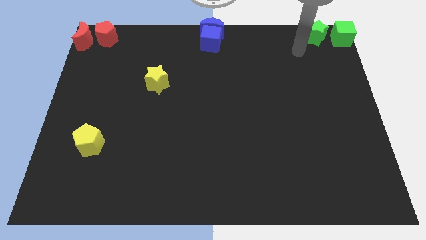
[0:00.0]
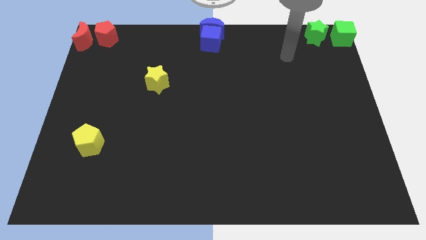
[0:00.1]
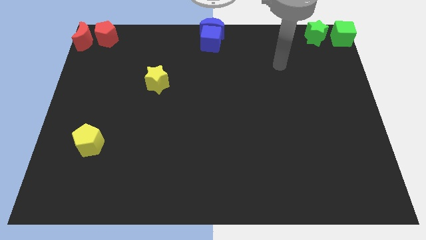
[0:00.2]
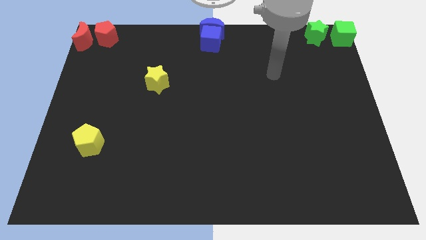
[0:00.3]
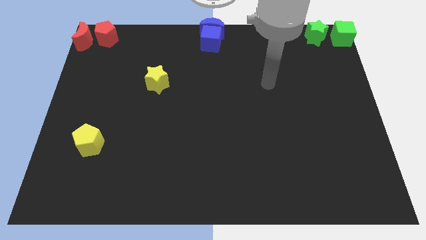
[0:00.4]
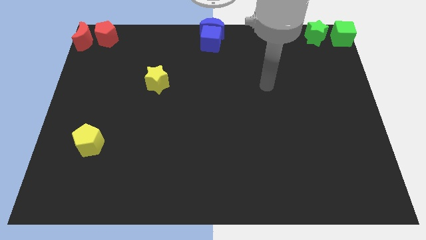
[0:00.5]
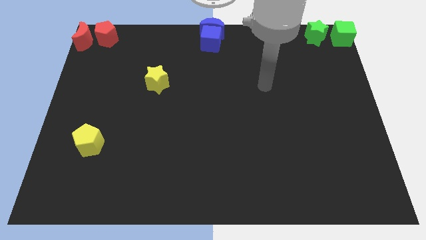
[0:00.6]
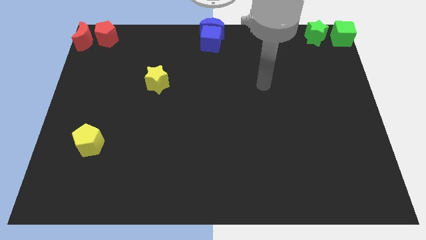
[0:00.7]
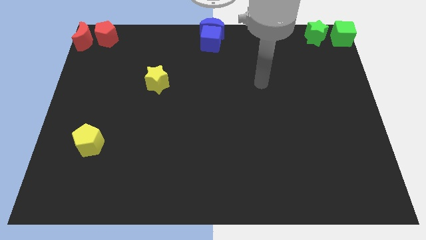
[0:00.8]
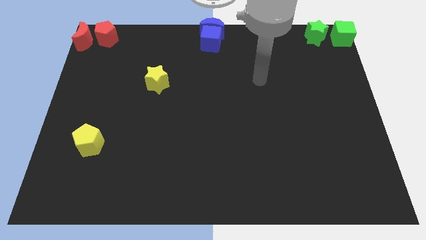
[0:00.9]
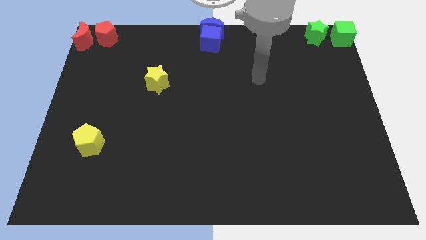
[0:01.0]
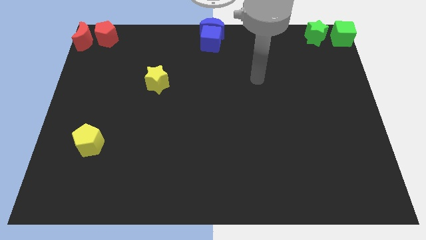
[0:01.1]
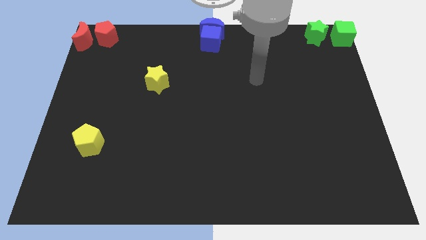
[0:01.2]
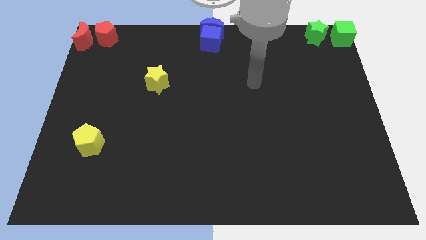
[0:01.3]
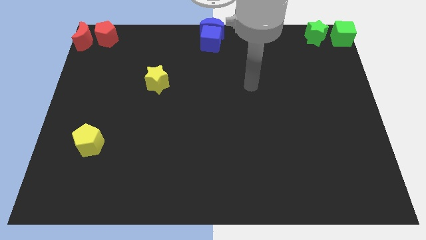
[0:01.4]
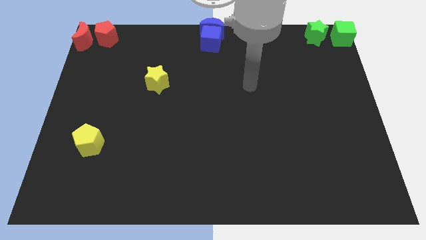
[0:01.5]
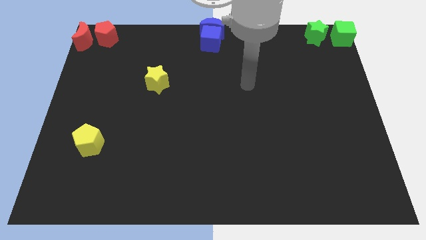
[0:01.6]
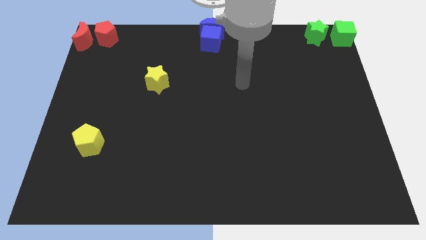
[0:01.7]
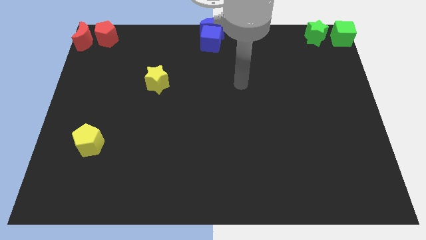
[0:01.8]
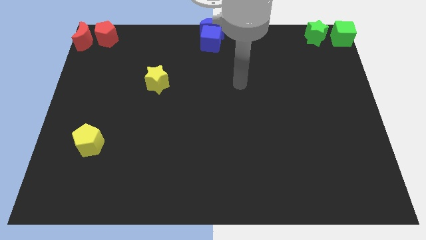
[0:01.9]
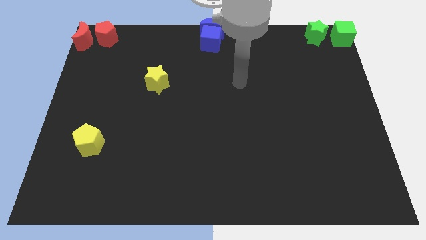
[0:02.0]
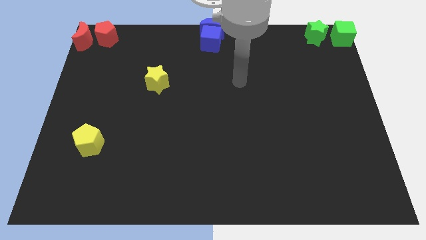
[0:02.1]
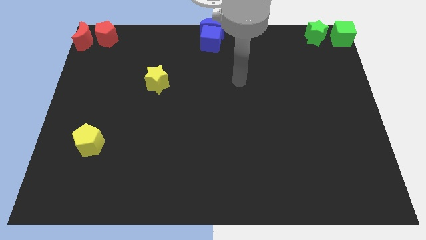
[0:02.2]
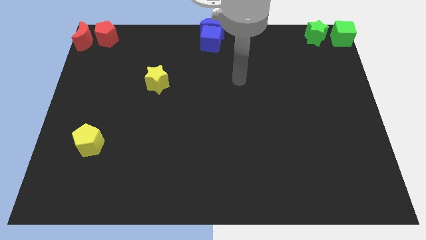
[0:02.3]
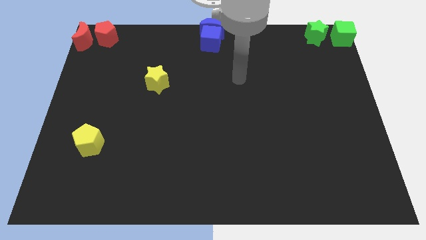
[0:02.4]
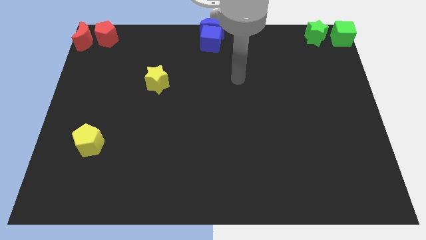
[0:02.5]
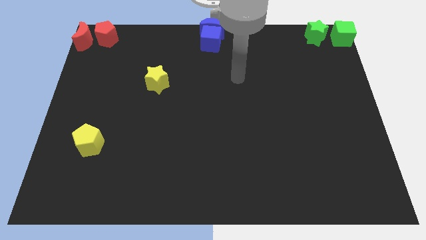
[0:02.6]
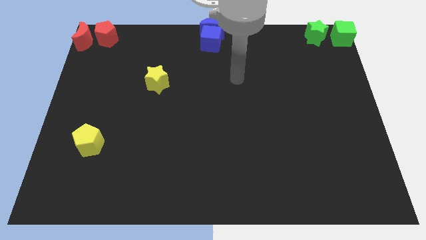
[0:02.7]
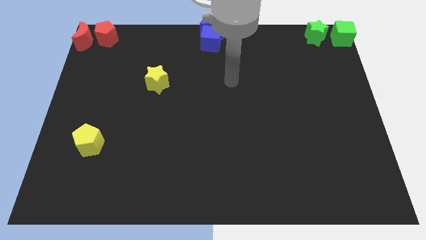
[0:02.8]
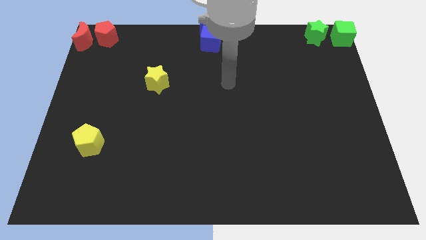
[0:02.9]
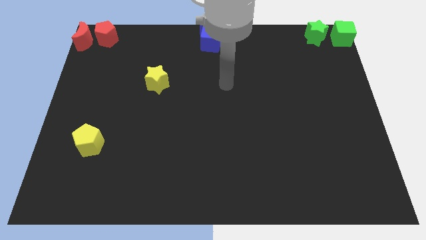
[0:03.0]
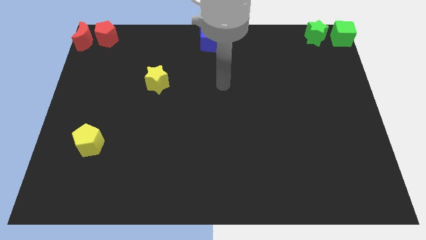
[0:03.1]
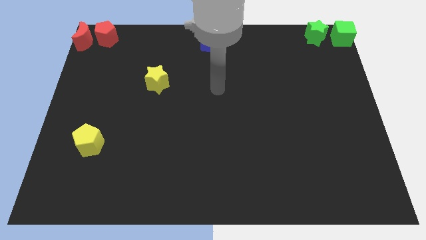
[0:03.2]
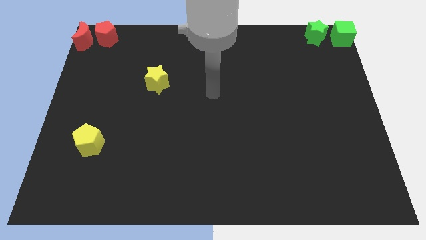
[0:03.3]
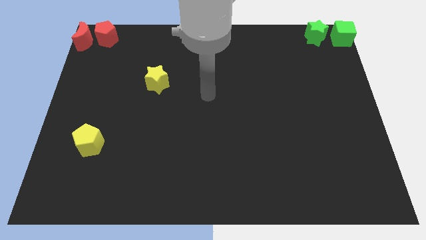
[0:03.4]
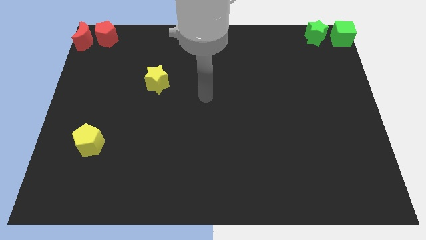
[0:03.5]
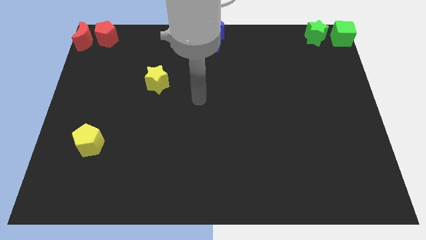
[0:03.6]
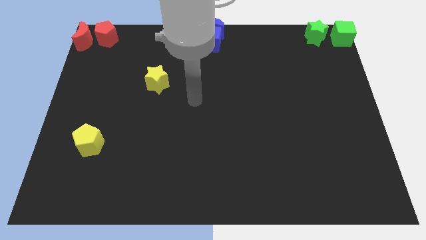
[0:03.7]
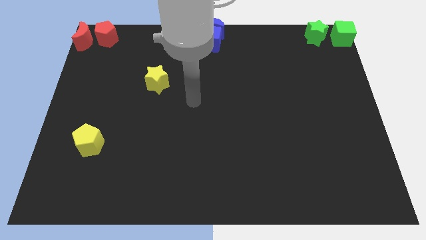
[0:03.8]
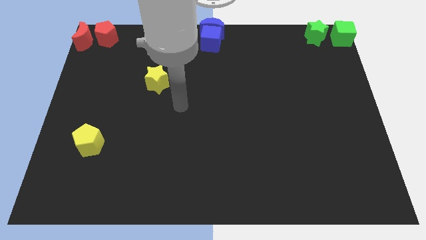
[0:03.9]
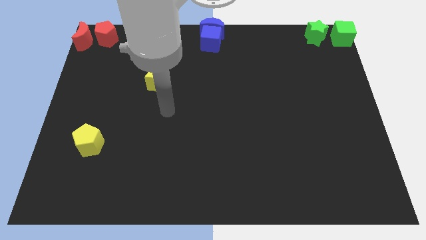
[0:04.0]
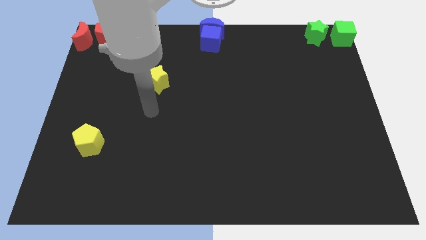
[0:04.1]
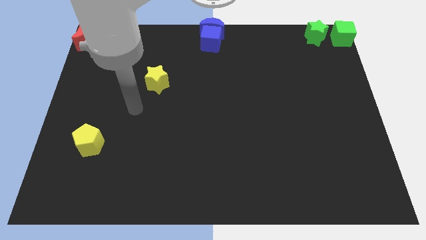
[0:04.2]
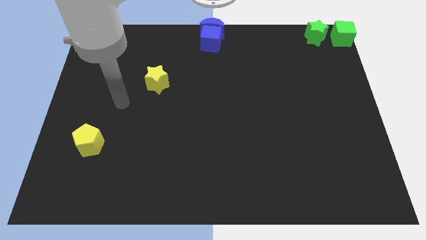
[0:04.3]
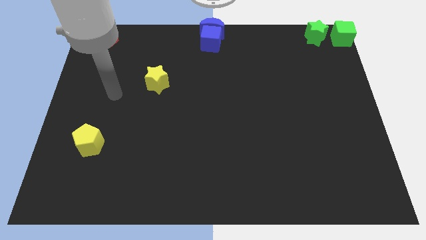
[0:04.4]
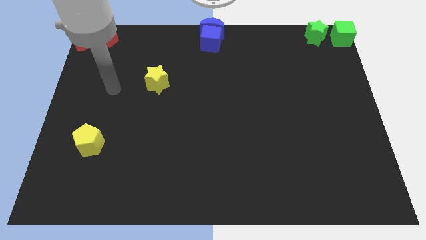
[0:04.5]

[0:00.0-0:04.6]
move your arm to the left of the yellow star

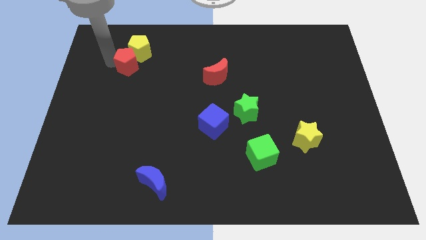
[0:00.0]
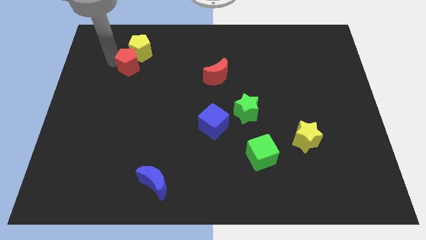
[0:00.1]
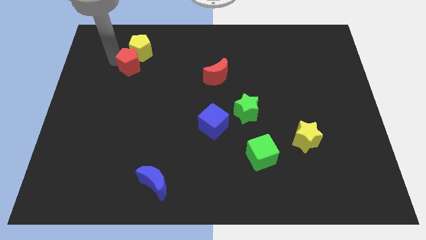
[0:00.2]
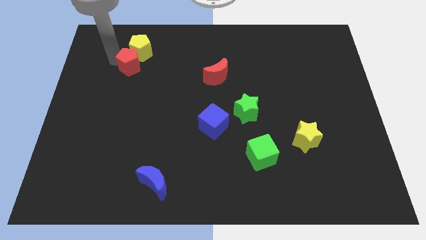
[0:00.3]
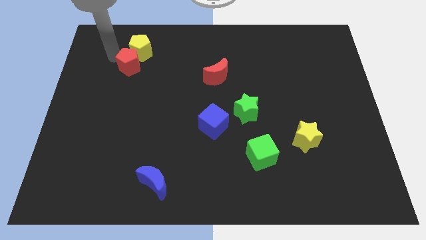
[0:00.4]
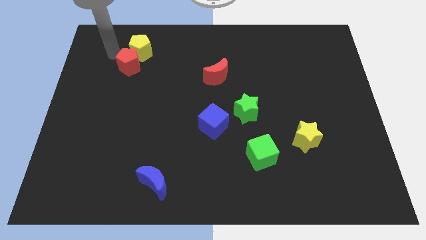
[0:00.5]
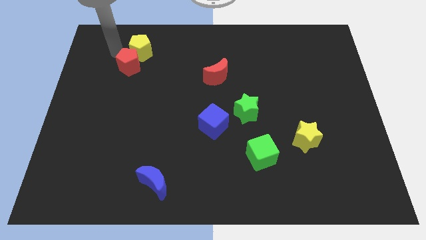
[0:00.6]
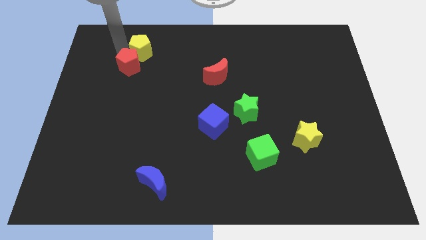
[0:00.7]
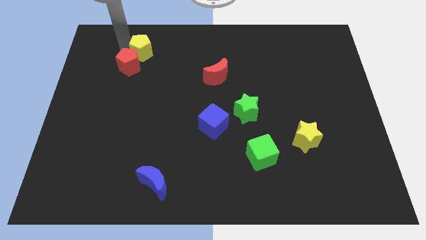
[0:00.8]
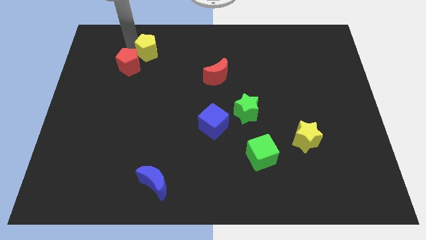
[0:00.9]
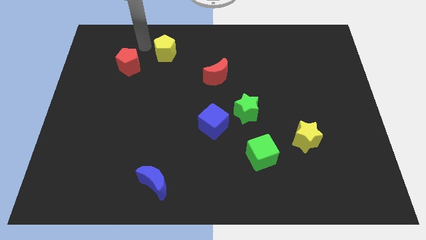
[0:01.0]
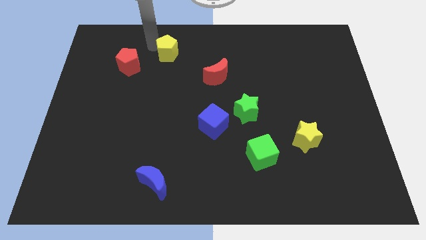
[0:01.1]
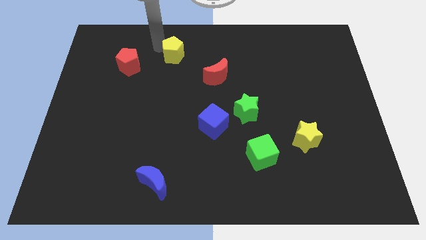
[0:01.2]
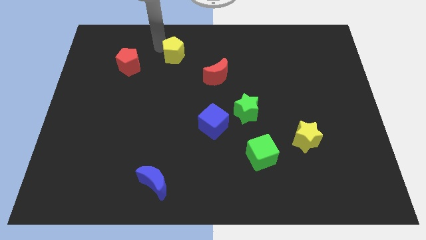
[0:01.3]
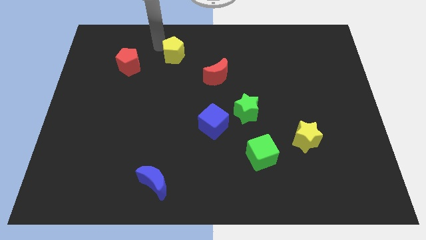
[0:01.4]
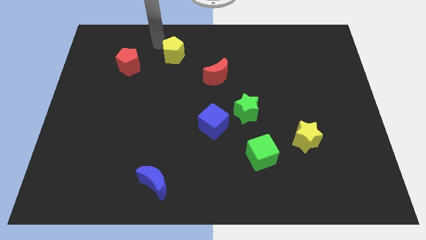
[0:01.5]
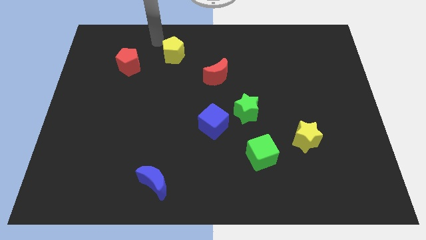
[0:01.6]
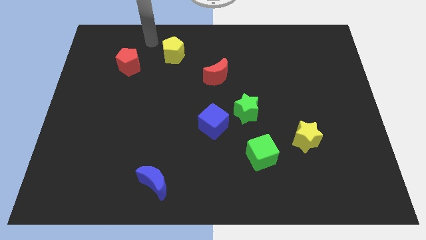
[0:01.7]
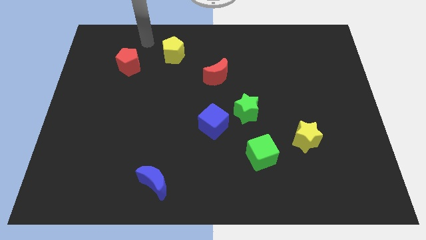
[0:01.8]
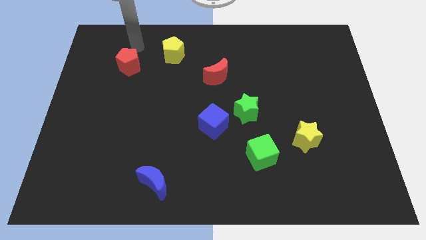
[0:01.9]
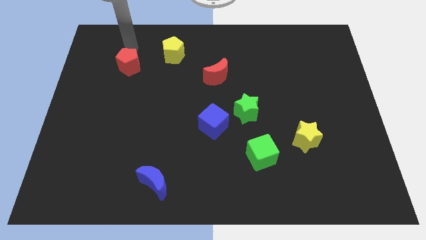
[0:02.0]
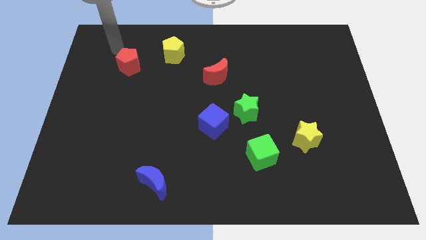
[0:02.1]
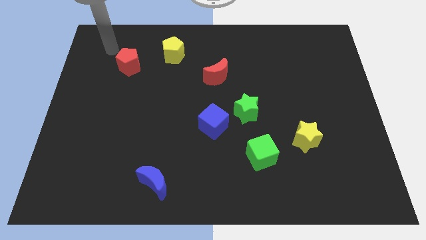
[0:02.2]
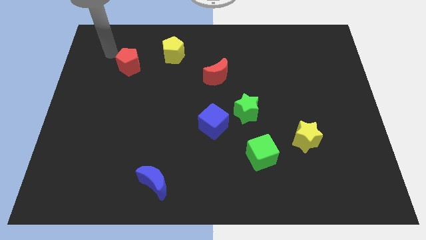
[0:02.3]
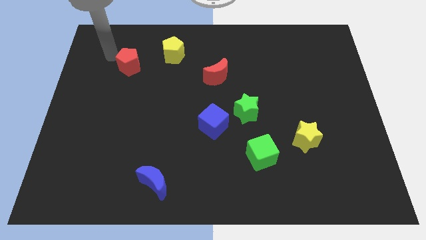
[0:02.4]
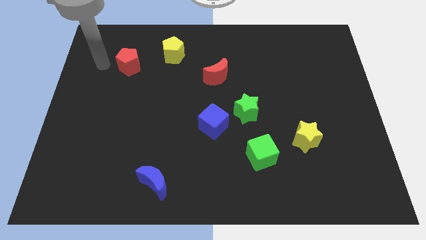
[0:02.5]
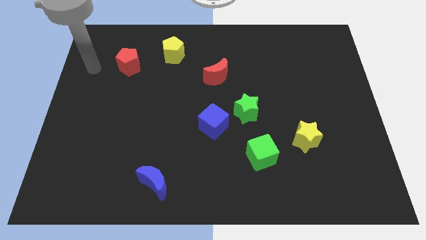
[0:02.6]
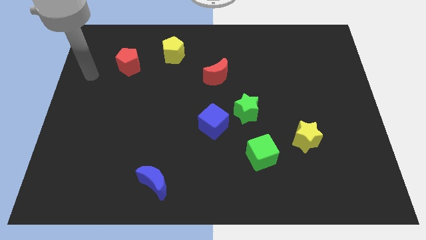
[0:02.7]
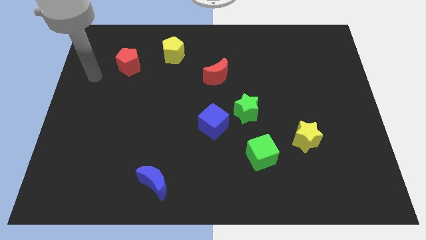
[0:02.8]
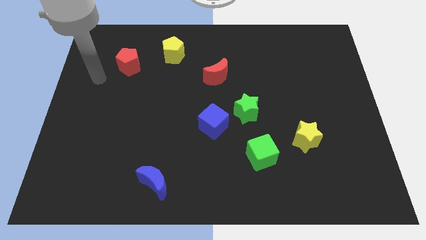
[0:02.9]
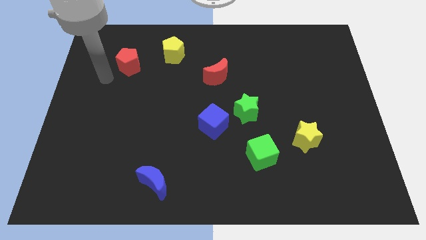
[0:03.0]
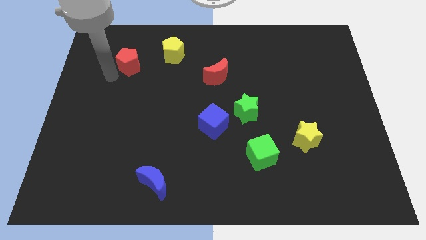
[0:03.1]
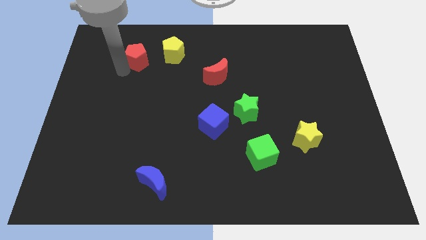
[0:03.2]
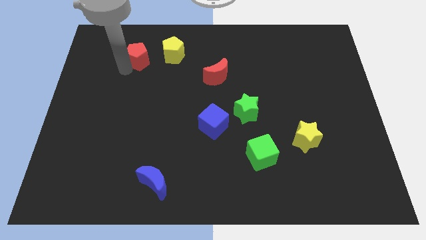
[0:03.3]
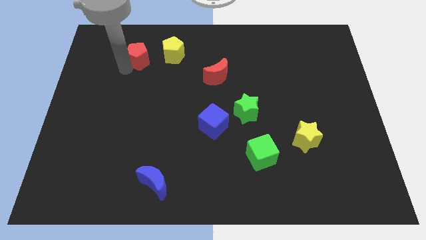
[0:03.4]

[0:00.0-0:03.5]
separate the yellow pentagon from the red pentagon

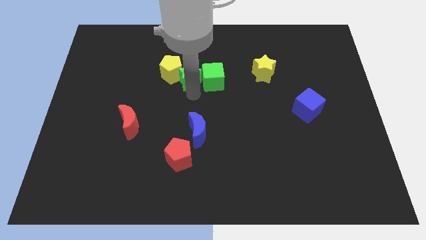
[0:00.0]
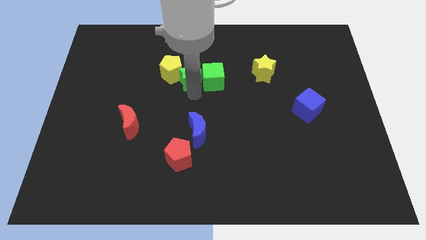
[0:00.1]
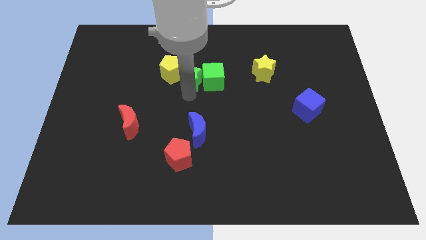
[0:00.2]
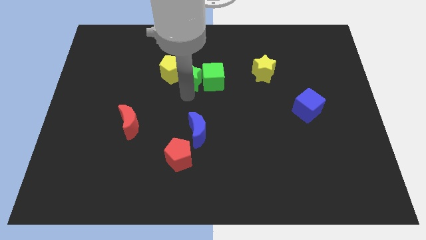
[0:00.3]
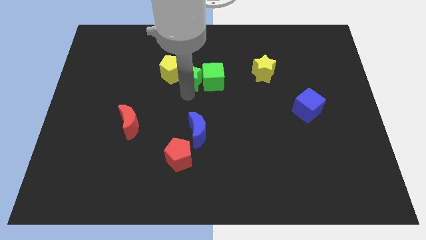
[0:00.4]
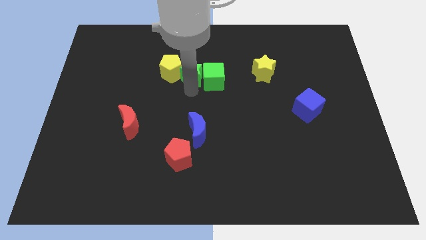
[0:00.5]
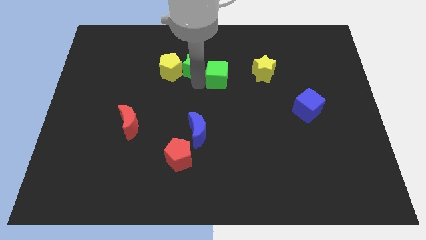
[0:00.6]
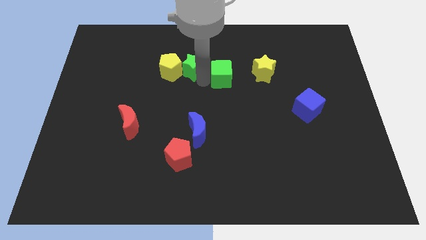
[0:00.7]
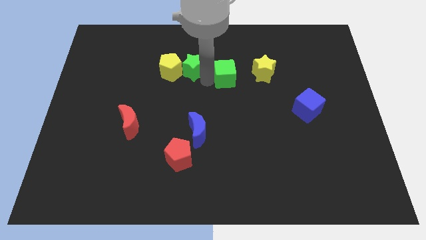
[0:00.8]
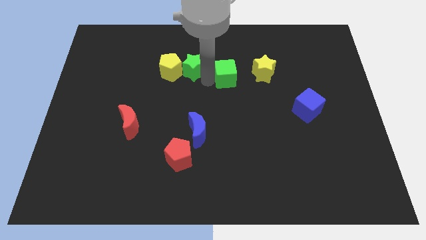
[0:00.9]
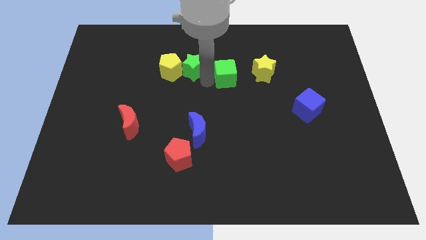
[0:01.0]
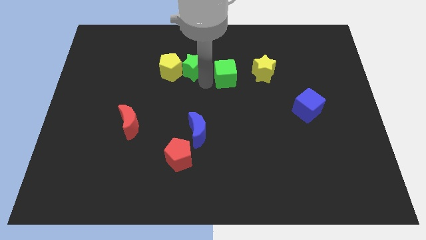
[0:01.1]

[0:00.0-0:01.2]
push the green star slightly to the right of the yellow pentagon
